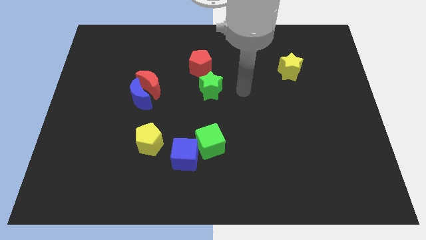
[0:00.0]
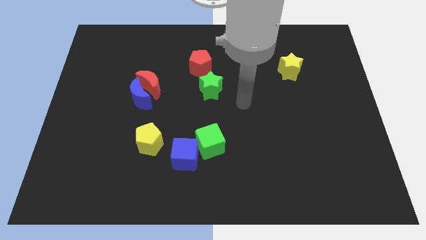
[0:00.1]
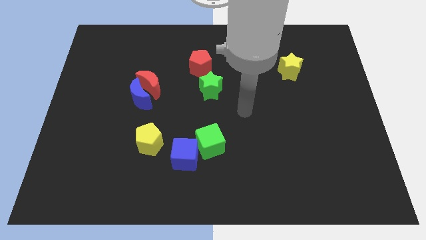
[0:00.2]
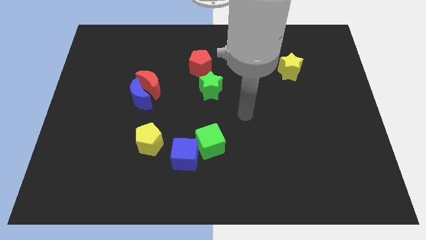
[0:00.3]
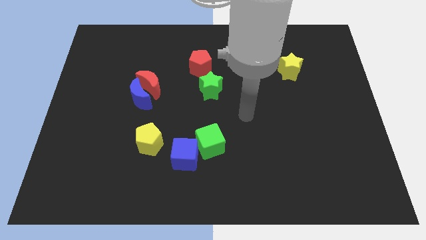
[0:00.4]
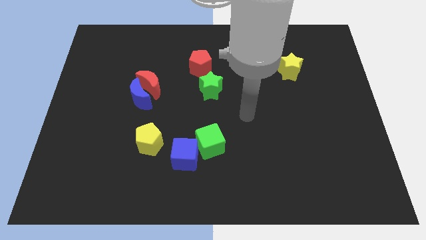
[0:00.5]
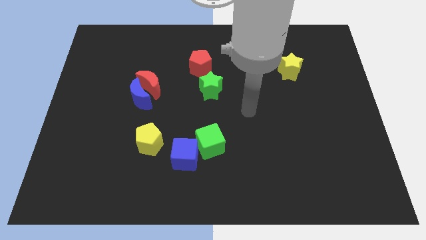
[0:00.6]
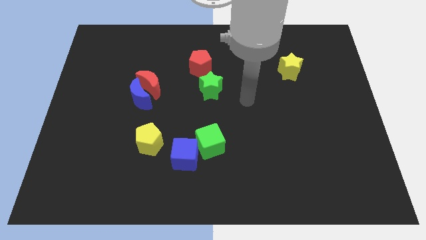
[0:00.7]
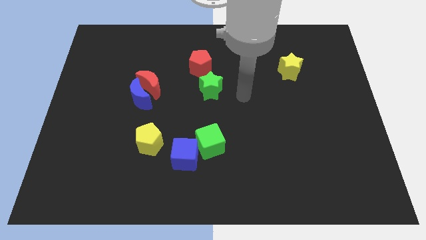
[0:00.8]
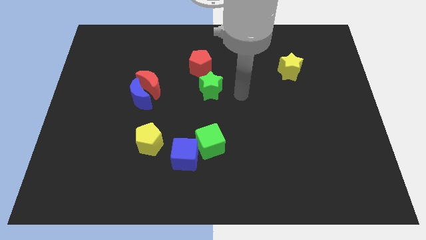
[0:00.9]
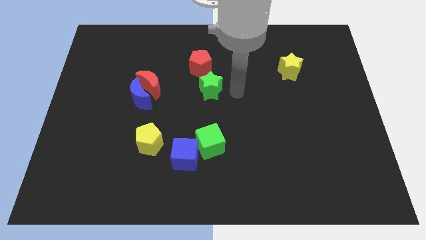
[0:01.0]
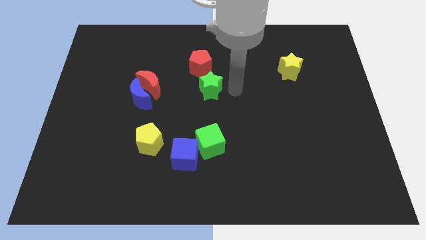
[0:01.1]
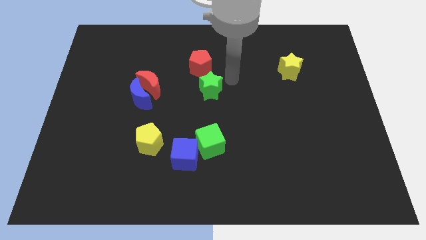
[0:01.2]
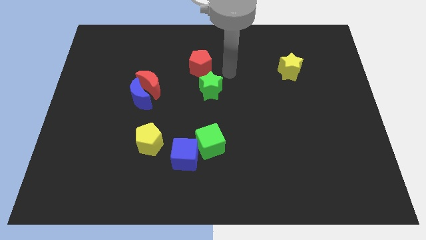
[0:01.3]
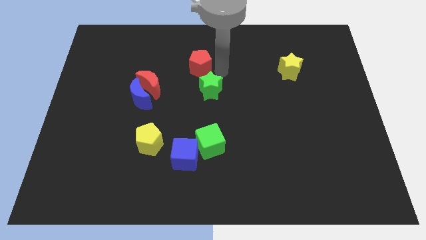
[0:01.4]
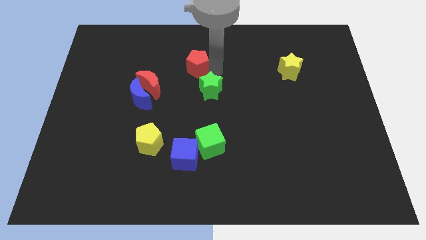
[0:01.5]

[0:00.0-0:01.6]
move your arm towards the red pentagon

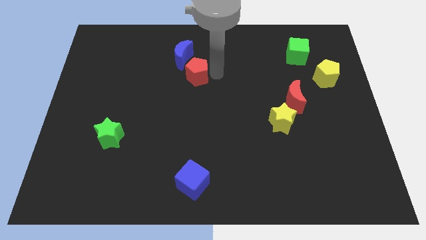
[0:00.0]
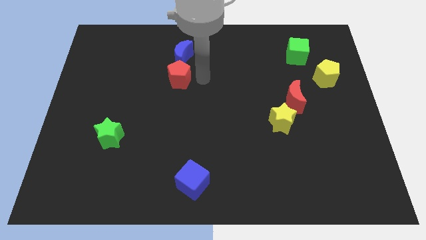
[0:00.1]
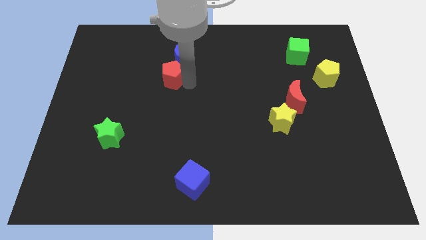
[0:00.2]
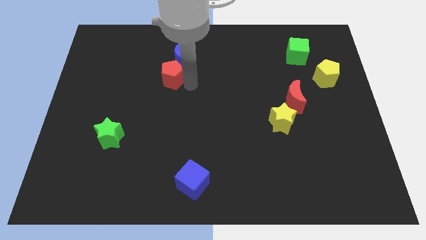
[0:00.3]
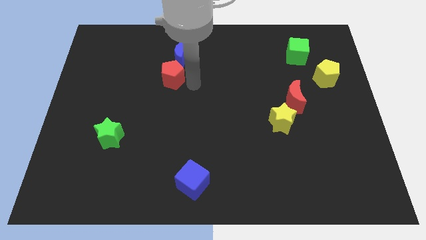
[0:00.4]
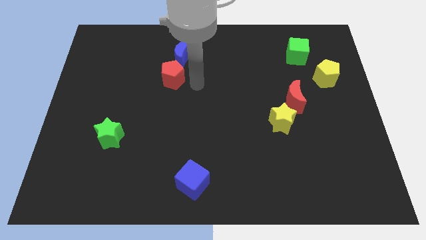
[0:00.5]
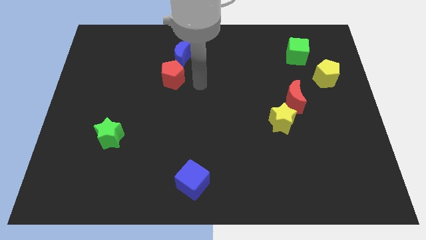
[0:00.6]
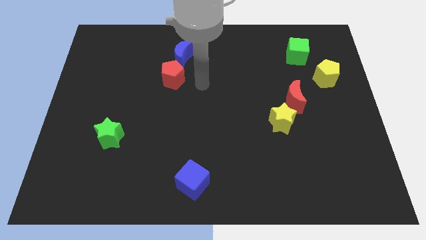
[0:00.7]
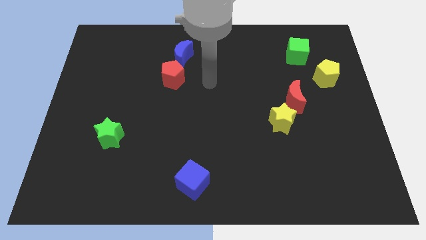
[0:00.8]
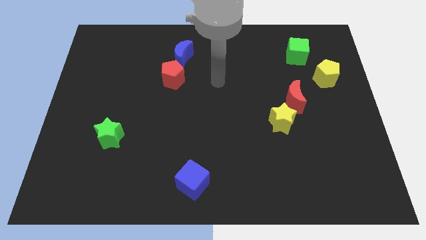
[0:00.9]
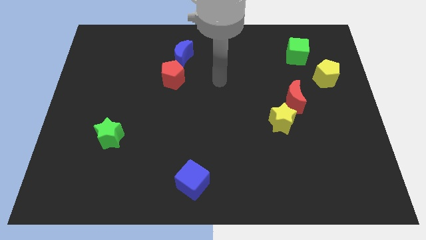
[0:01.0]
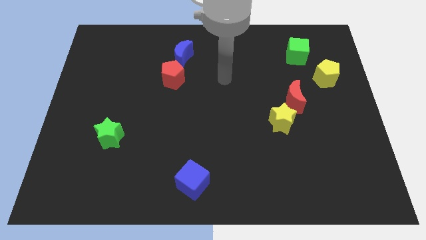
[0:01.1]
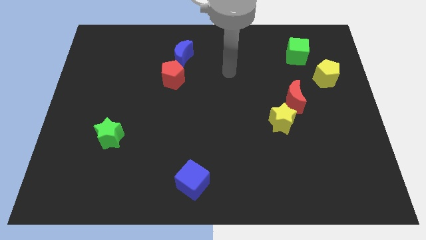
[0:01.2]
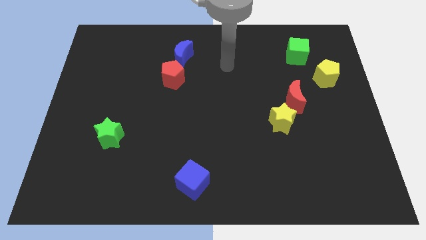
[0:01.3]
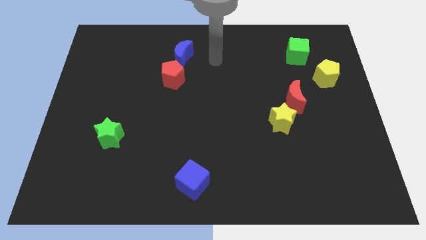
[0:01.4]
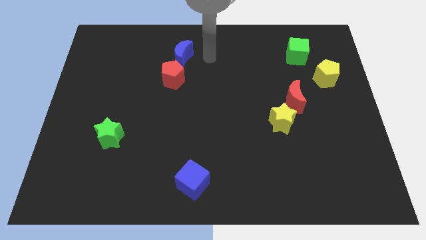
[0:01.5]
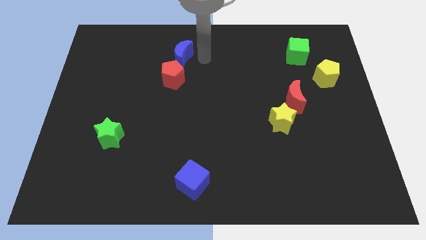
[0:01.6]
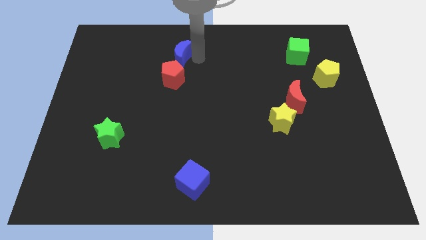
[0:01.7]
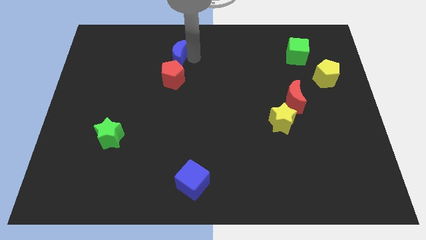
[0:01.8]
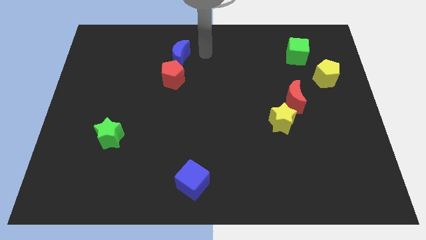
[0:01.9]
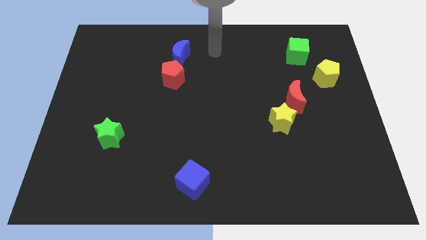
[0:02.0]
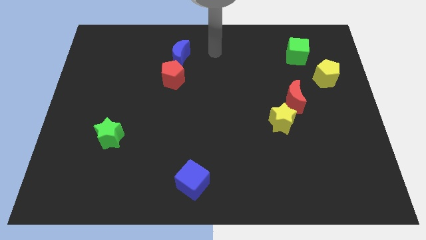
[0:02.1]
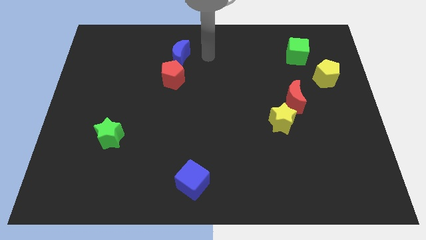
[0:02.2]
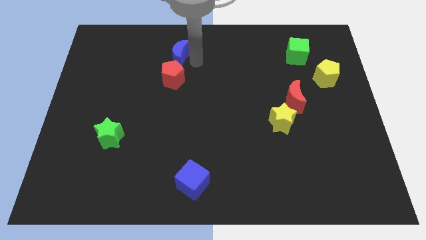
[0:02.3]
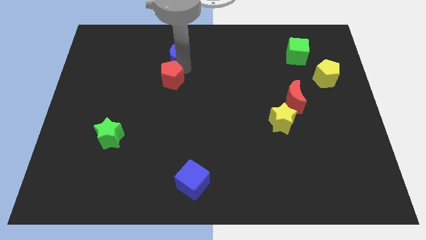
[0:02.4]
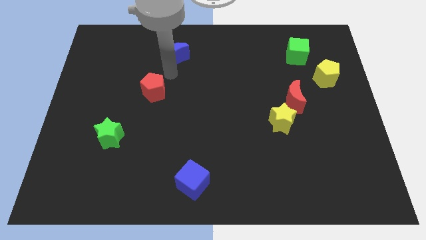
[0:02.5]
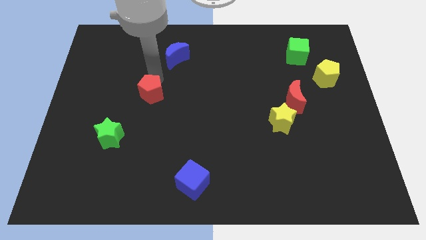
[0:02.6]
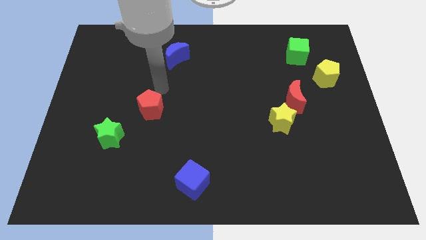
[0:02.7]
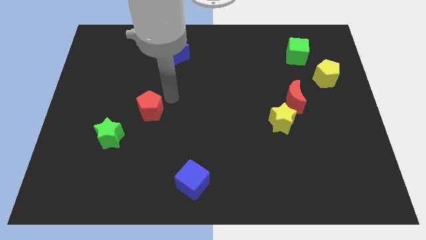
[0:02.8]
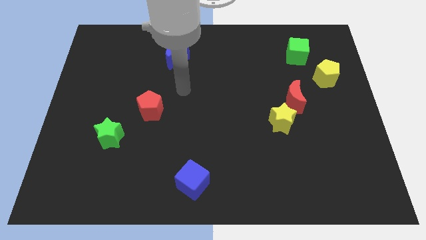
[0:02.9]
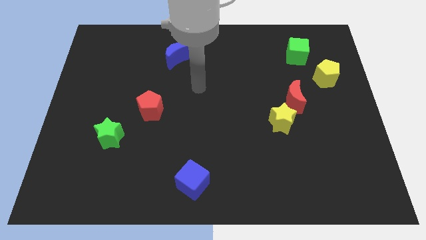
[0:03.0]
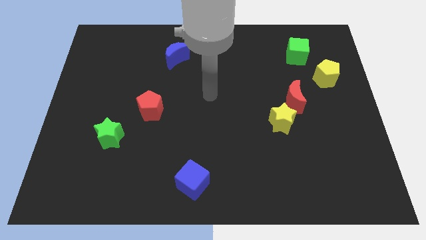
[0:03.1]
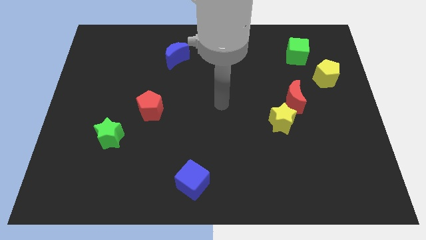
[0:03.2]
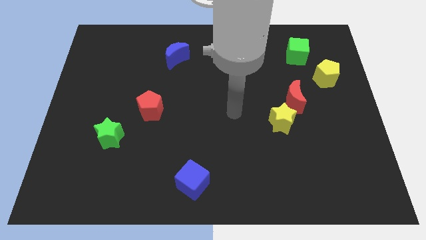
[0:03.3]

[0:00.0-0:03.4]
separate the blue crescent and the red pentagon

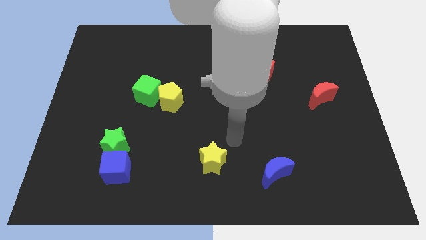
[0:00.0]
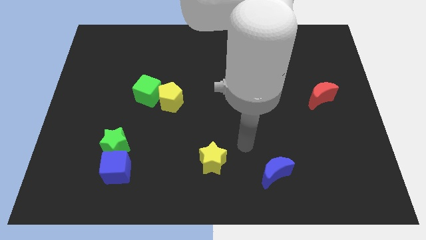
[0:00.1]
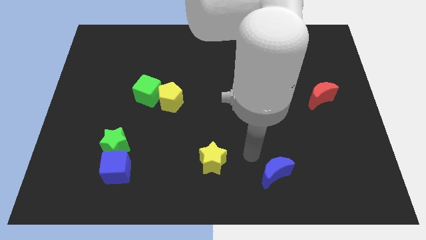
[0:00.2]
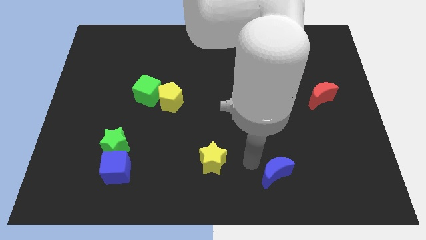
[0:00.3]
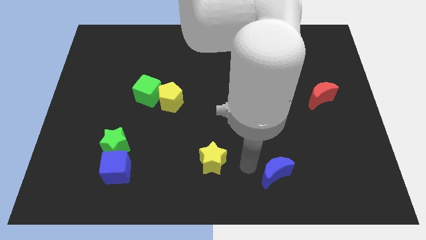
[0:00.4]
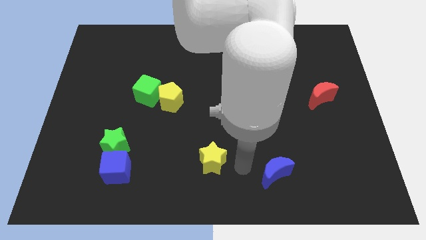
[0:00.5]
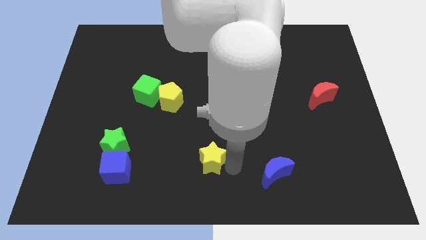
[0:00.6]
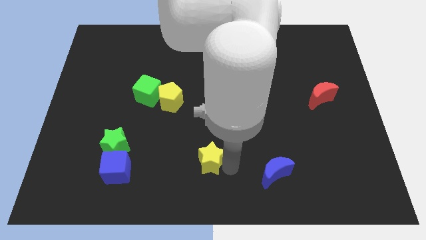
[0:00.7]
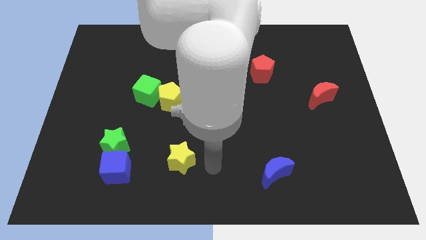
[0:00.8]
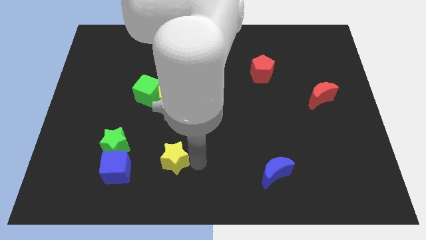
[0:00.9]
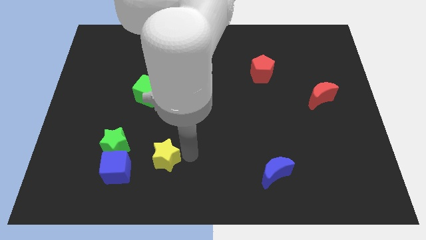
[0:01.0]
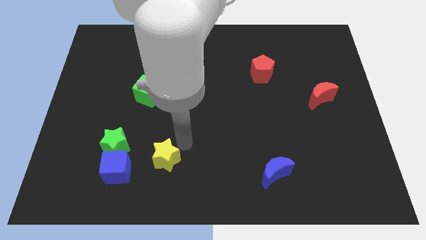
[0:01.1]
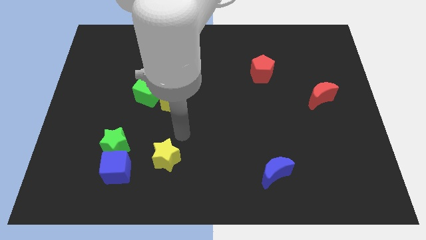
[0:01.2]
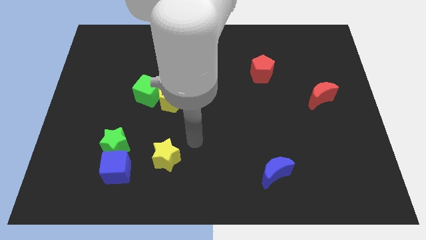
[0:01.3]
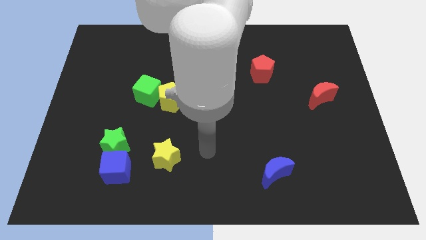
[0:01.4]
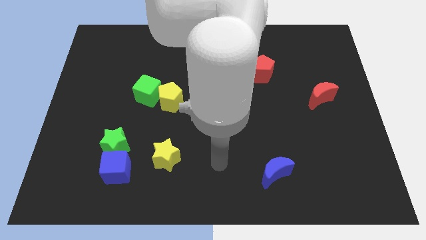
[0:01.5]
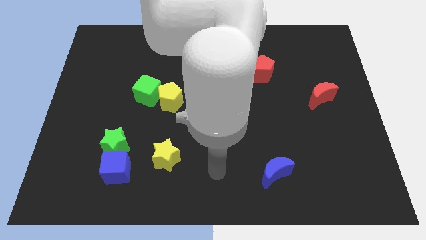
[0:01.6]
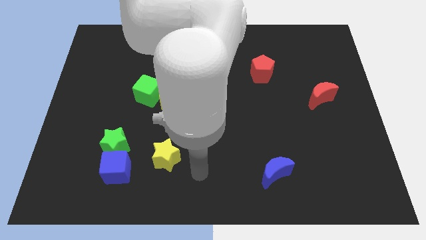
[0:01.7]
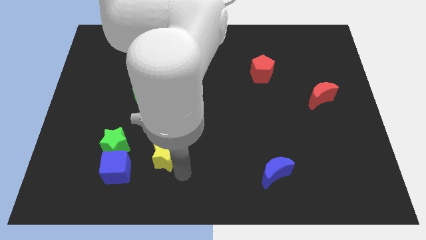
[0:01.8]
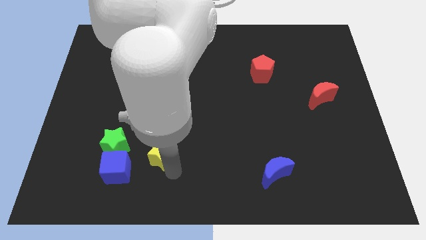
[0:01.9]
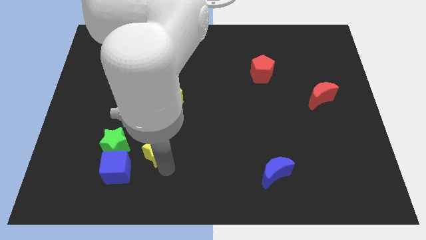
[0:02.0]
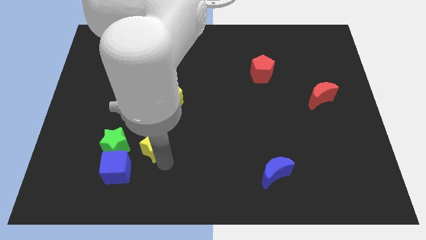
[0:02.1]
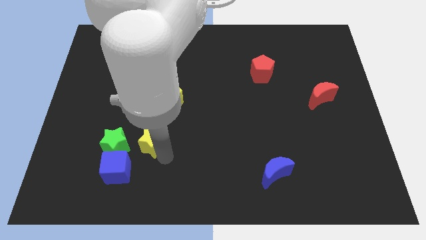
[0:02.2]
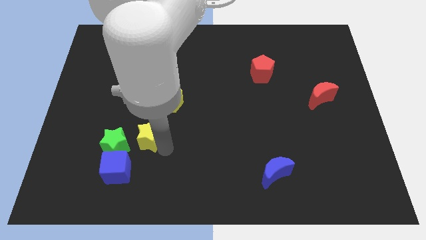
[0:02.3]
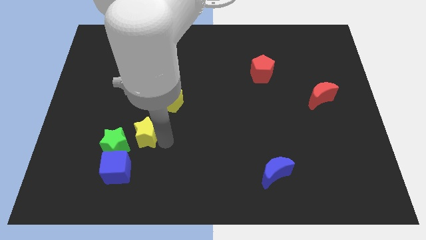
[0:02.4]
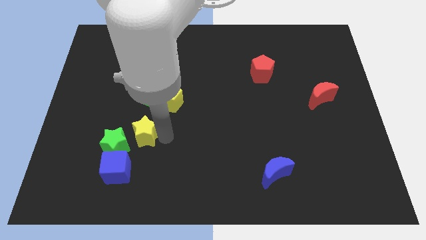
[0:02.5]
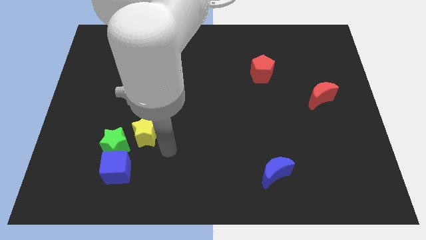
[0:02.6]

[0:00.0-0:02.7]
place the yellow star below the yellow pentagon

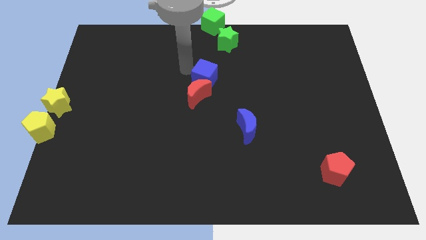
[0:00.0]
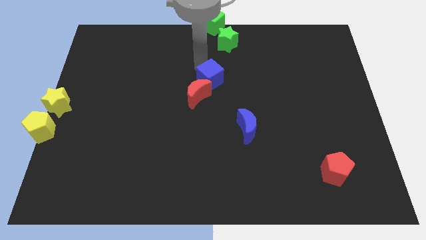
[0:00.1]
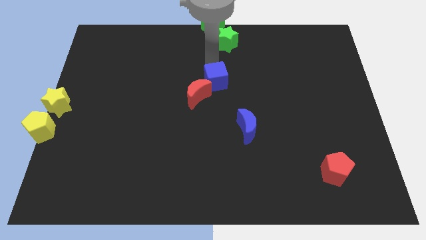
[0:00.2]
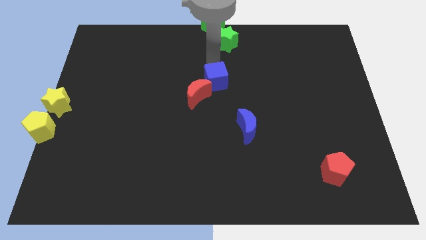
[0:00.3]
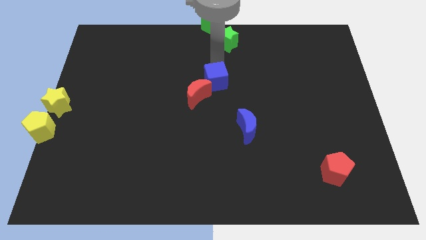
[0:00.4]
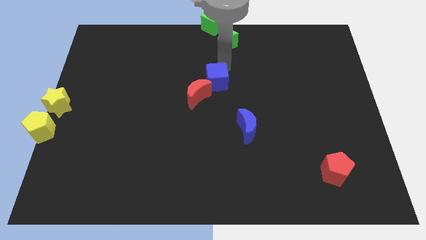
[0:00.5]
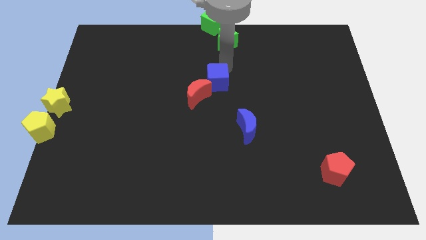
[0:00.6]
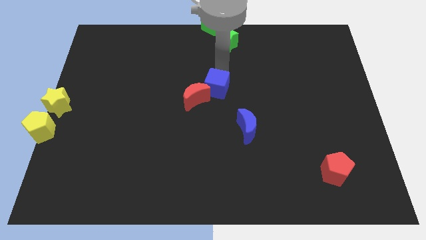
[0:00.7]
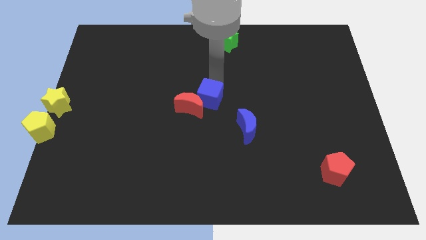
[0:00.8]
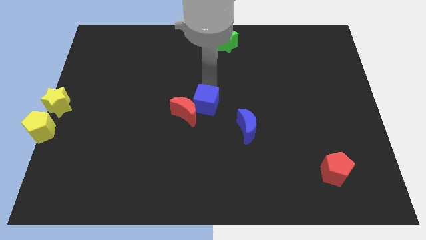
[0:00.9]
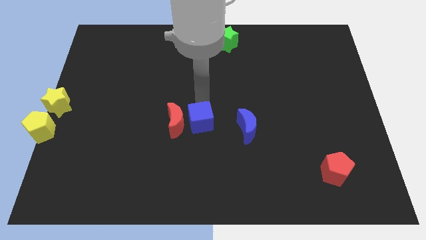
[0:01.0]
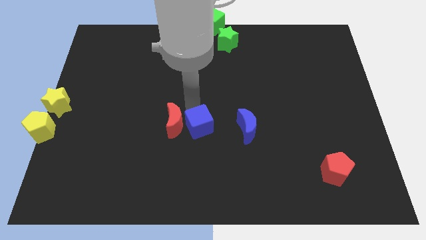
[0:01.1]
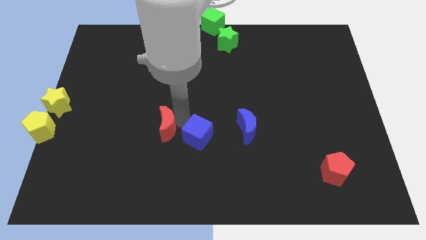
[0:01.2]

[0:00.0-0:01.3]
arrange the red moon blue cube and blue moon in a horizontal line
